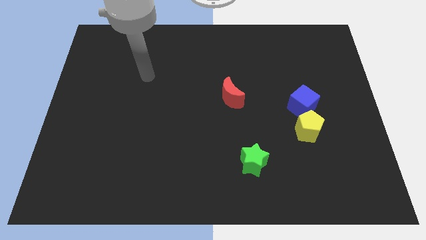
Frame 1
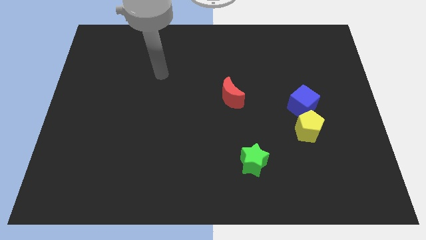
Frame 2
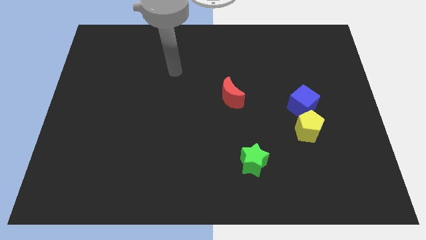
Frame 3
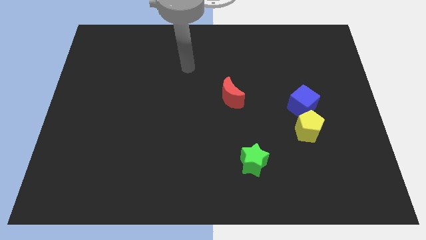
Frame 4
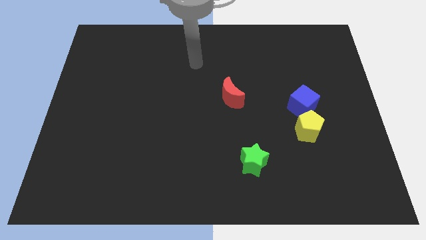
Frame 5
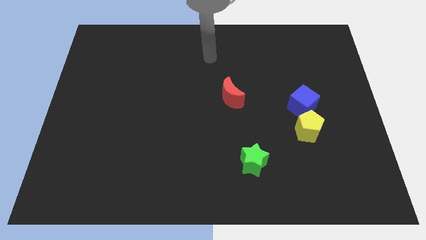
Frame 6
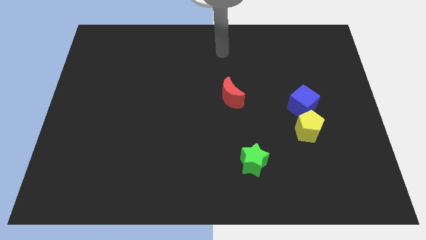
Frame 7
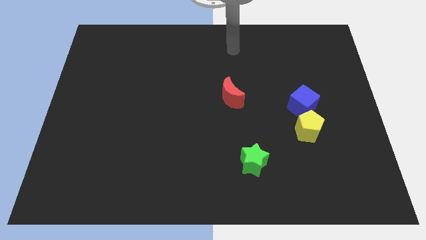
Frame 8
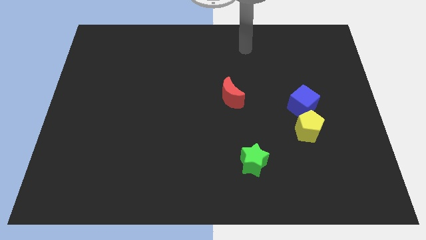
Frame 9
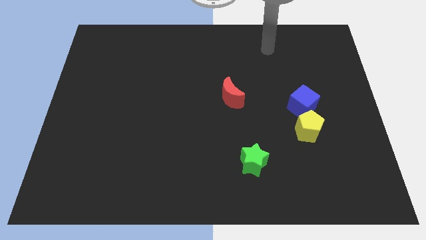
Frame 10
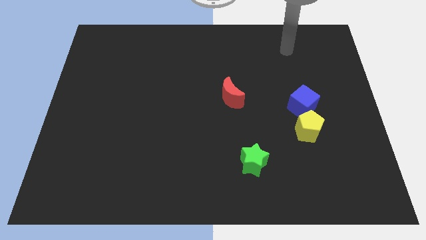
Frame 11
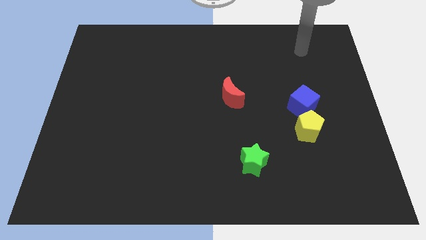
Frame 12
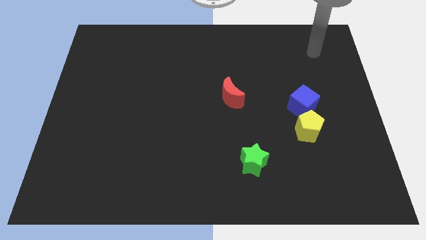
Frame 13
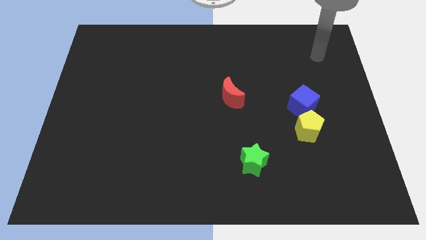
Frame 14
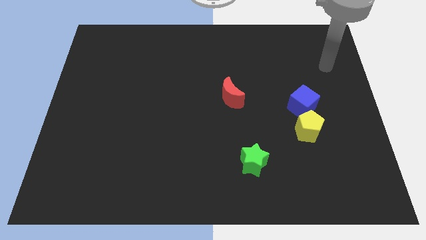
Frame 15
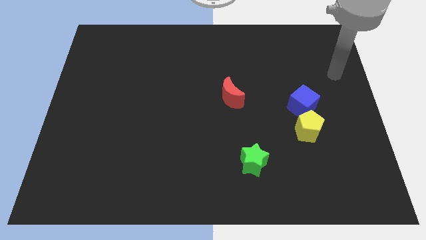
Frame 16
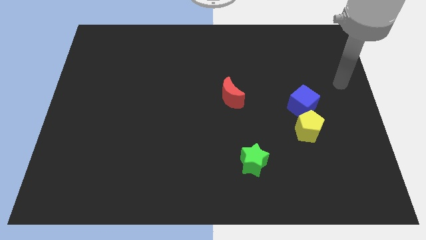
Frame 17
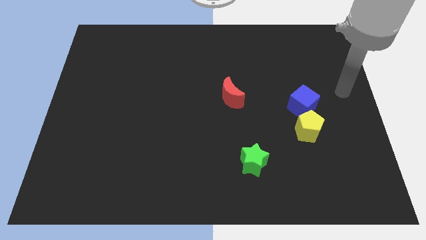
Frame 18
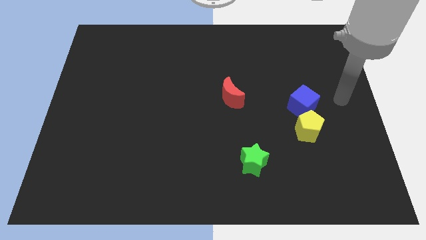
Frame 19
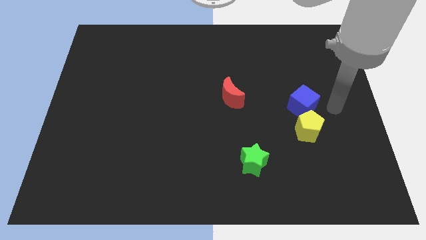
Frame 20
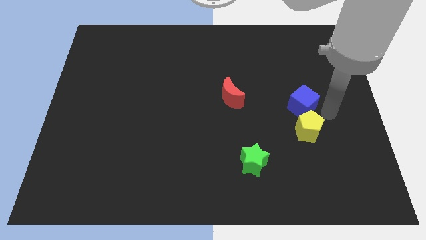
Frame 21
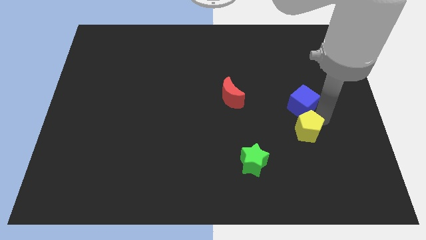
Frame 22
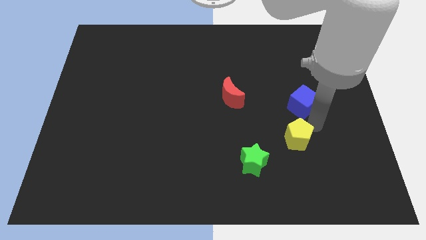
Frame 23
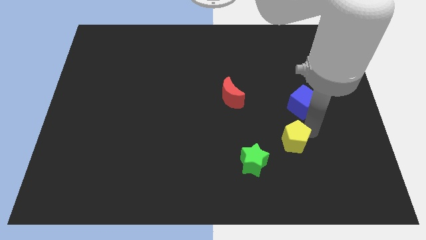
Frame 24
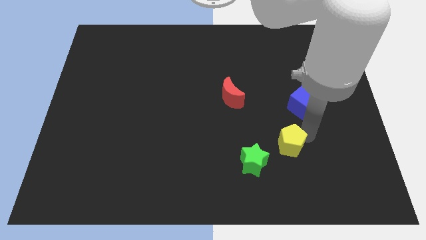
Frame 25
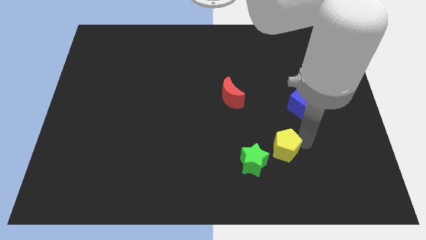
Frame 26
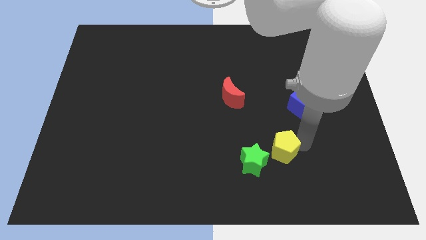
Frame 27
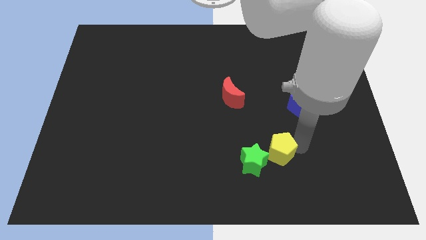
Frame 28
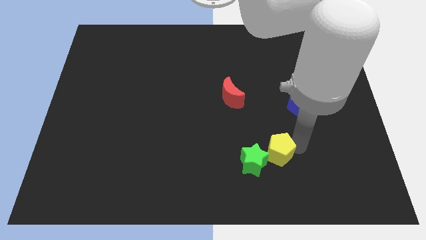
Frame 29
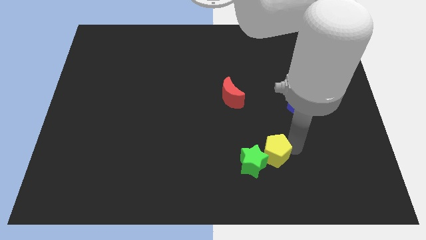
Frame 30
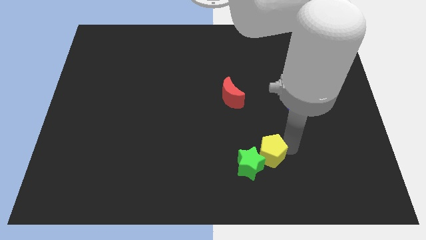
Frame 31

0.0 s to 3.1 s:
slide the yellow block close to the green block

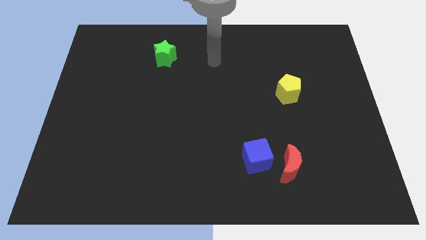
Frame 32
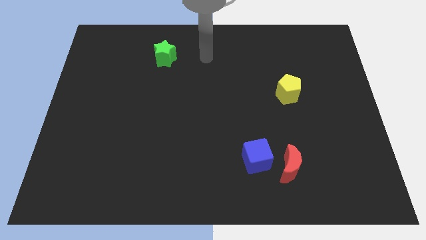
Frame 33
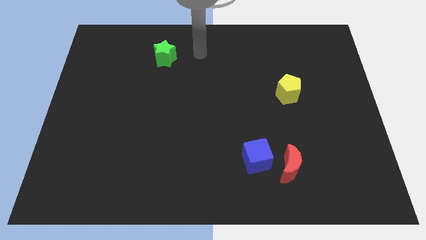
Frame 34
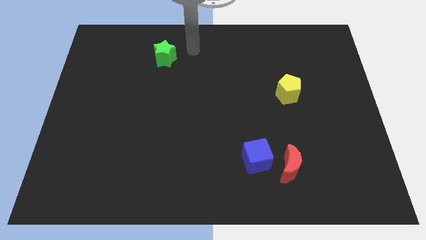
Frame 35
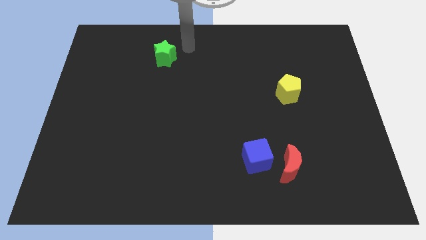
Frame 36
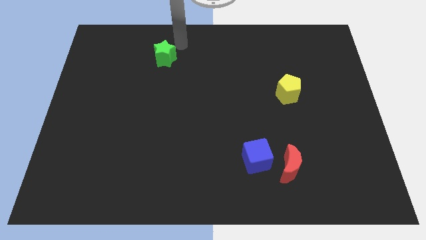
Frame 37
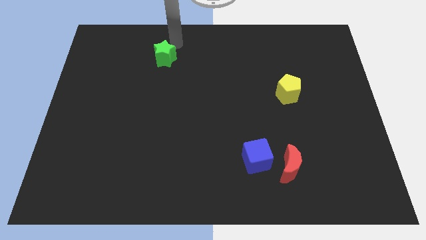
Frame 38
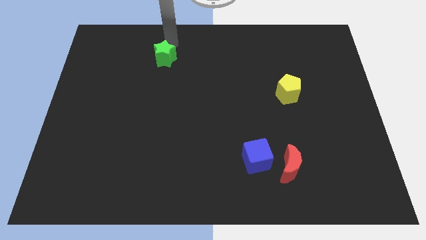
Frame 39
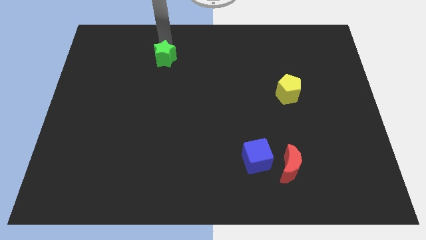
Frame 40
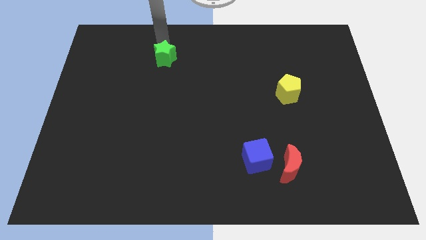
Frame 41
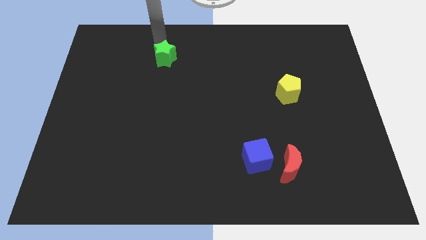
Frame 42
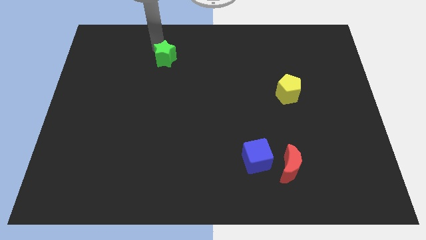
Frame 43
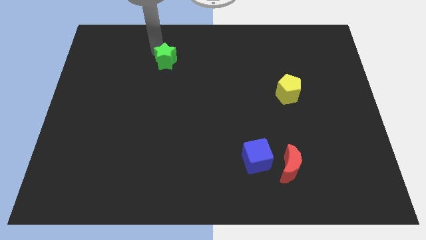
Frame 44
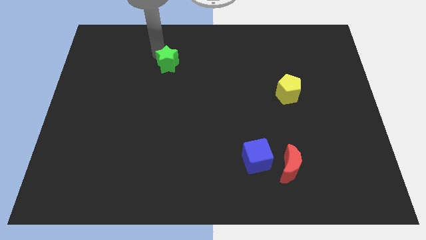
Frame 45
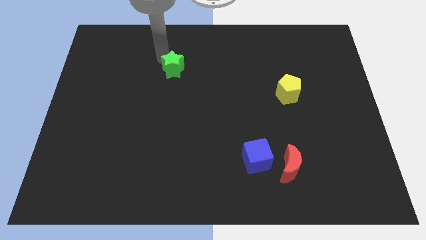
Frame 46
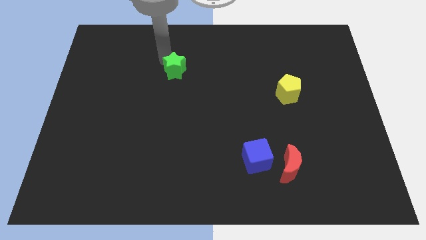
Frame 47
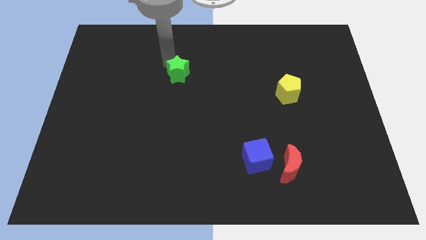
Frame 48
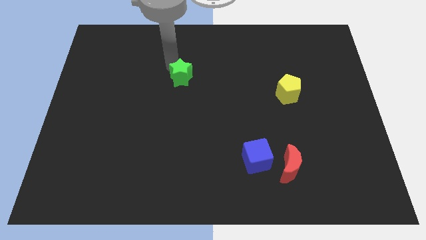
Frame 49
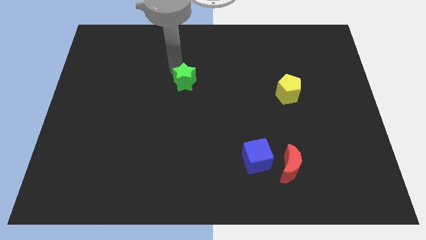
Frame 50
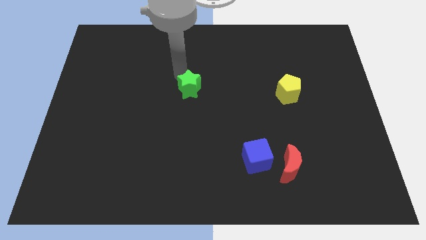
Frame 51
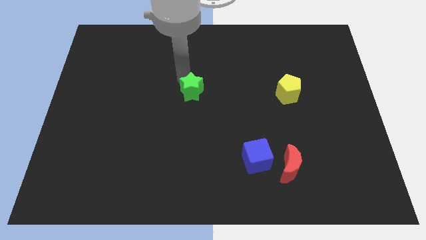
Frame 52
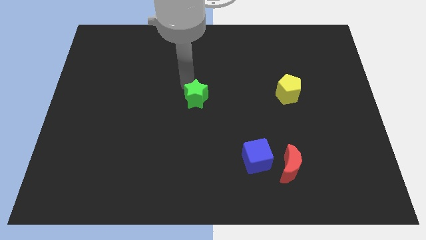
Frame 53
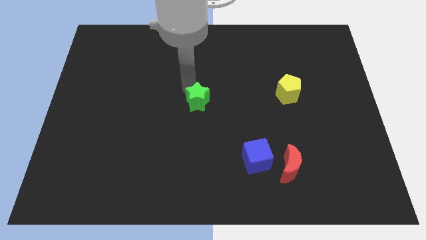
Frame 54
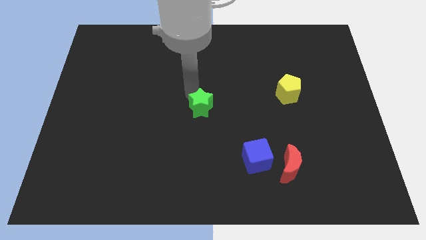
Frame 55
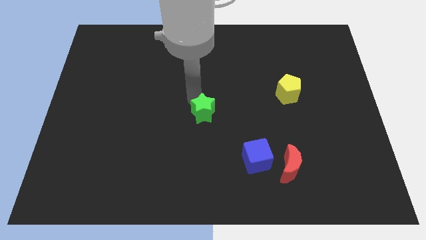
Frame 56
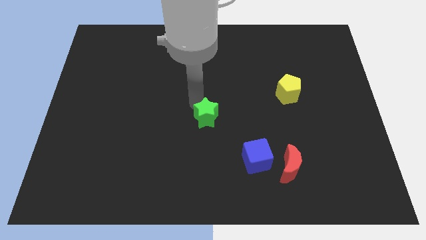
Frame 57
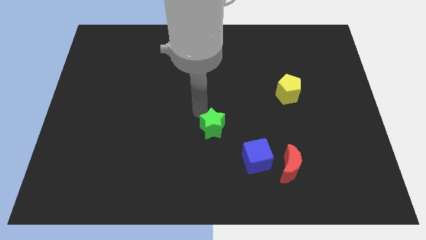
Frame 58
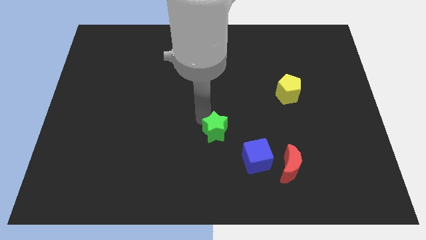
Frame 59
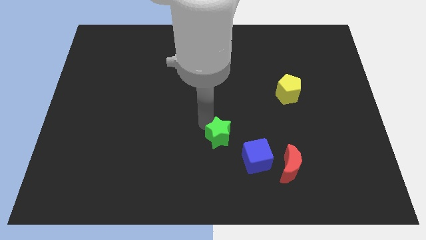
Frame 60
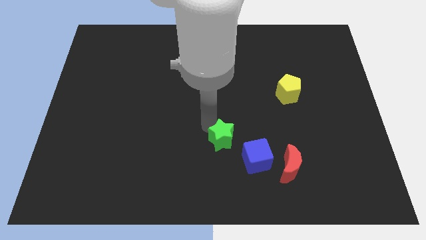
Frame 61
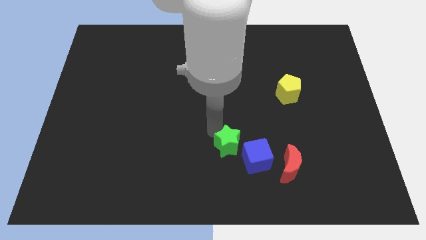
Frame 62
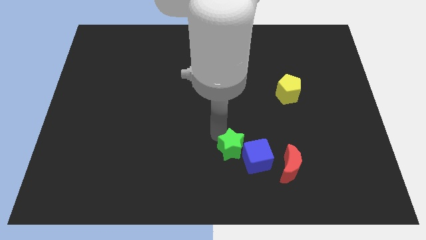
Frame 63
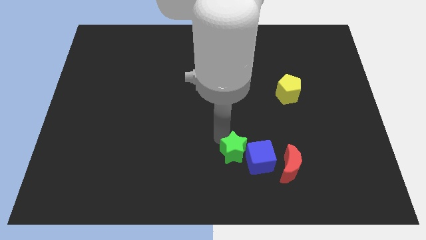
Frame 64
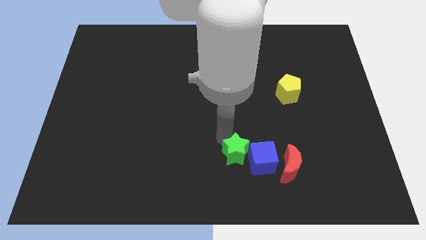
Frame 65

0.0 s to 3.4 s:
push the green block to the blue cube

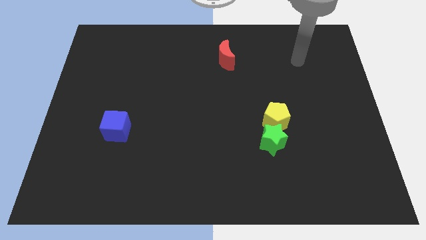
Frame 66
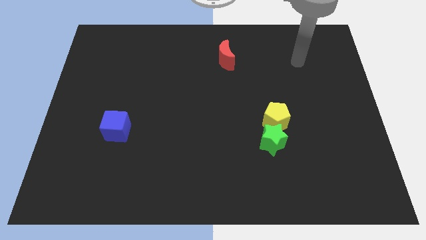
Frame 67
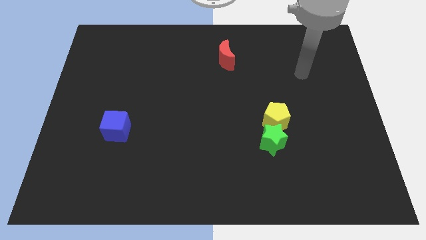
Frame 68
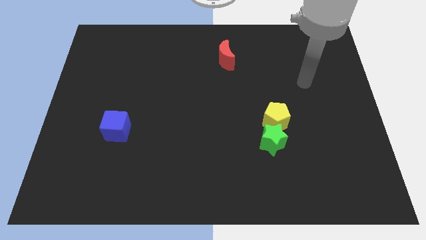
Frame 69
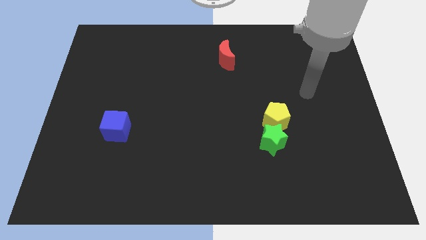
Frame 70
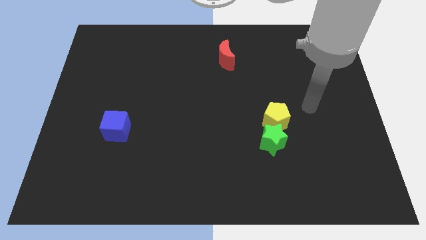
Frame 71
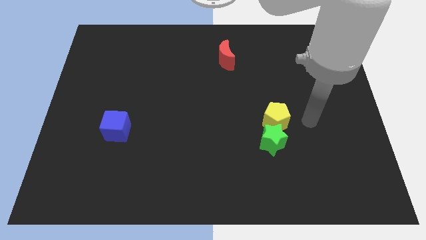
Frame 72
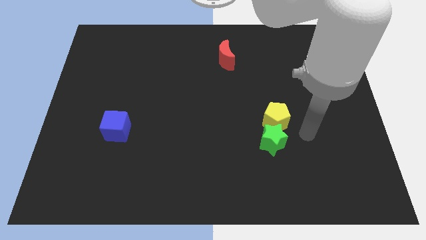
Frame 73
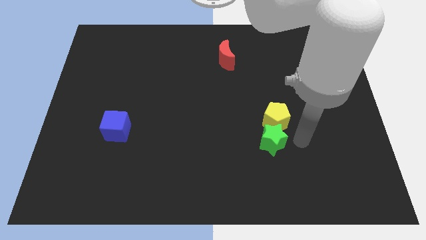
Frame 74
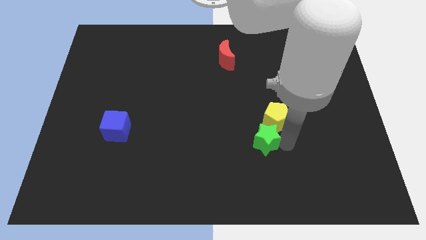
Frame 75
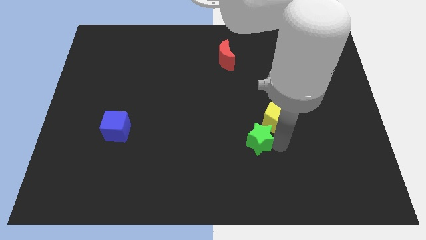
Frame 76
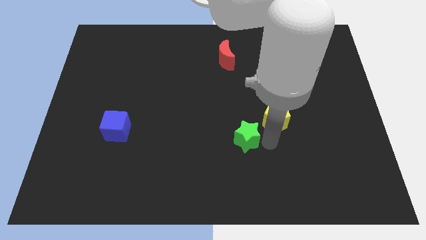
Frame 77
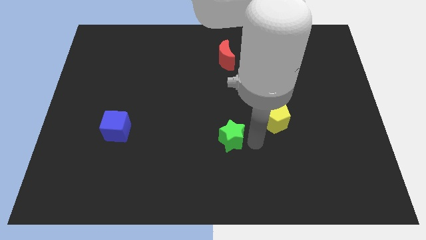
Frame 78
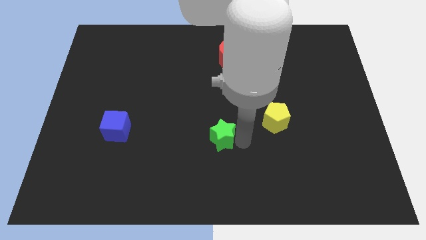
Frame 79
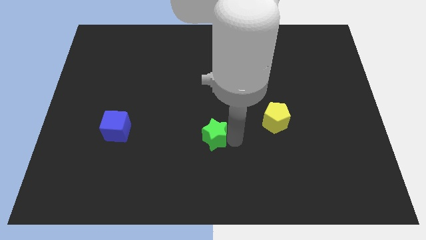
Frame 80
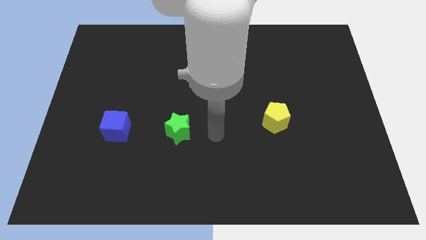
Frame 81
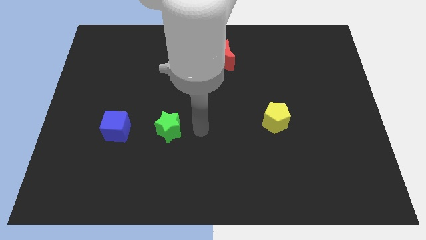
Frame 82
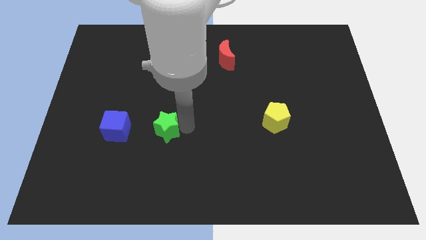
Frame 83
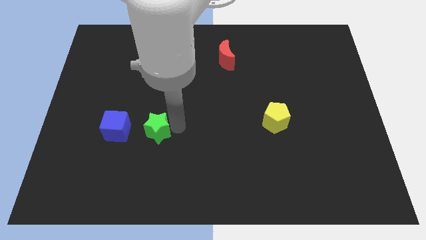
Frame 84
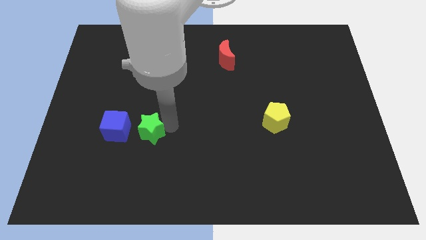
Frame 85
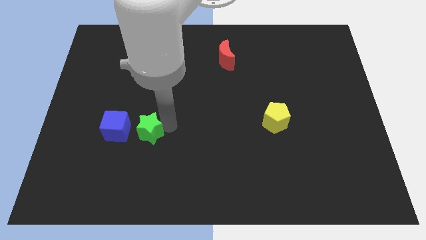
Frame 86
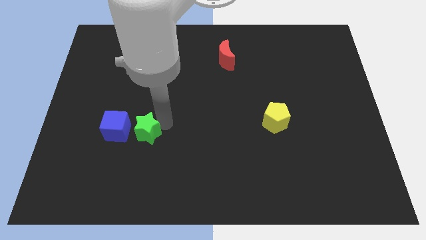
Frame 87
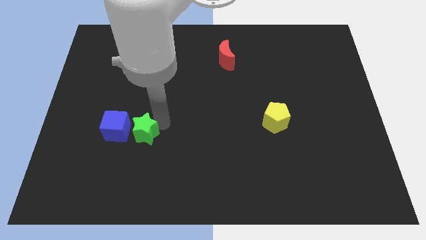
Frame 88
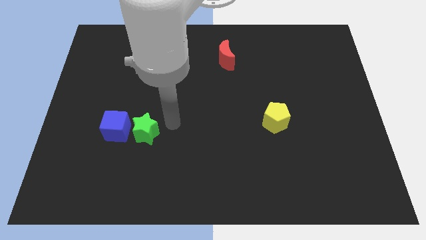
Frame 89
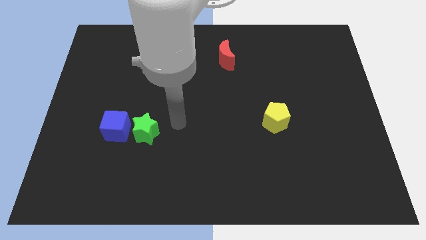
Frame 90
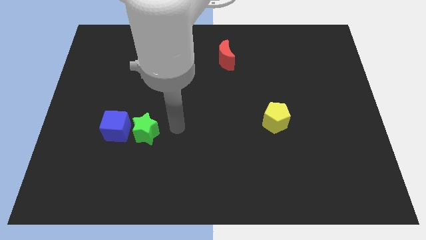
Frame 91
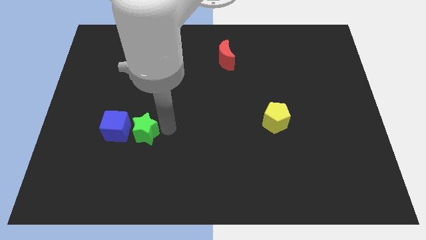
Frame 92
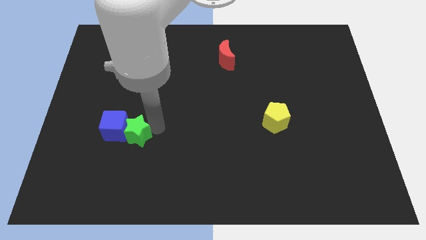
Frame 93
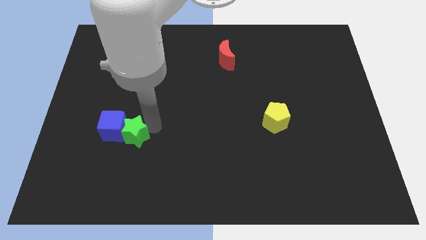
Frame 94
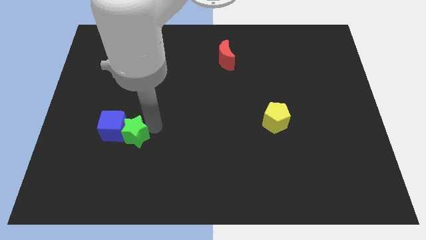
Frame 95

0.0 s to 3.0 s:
push the green star towards the blue block
